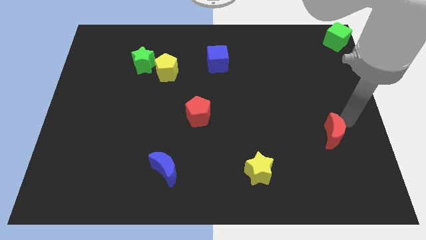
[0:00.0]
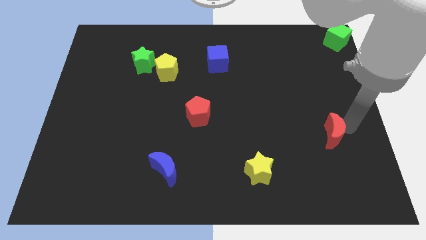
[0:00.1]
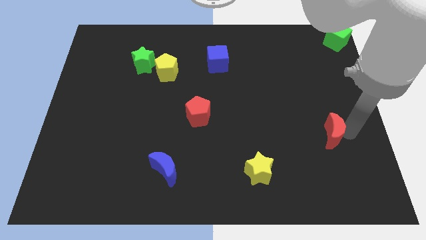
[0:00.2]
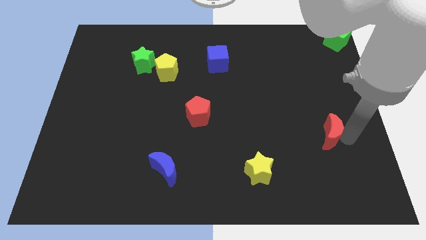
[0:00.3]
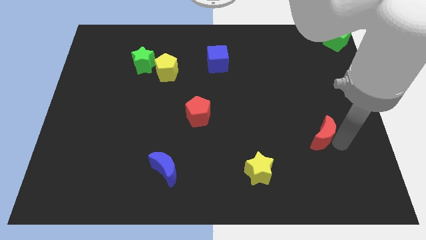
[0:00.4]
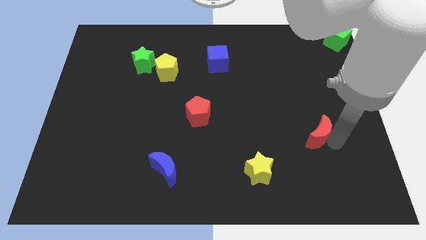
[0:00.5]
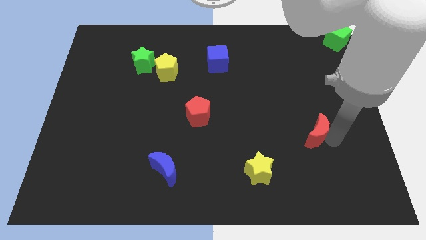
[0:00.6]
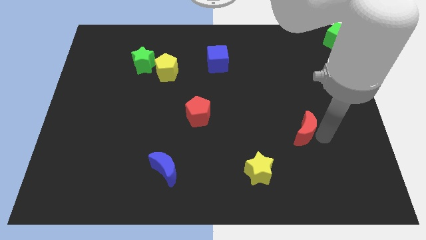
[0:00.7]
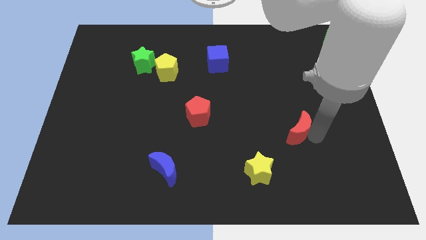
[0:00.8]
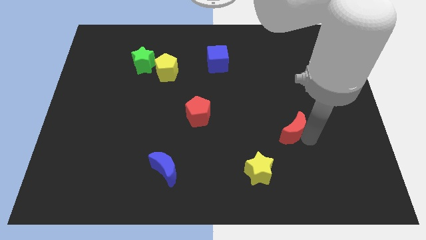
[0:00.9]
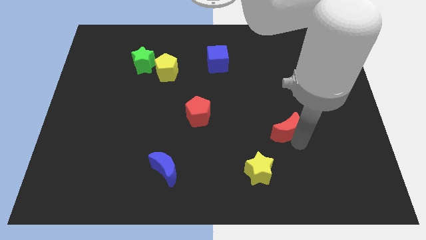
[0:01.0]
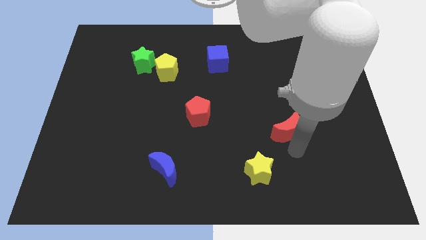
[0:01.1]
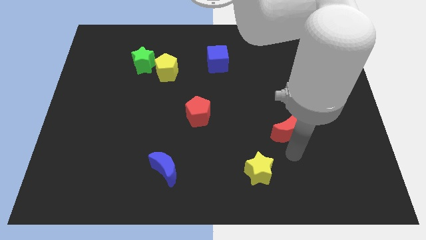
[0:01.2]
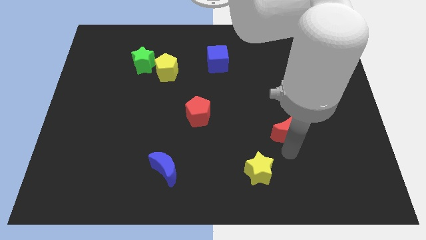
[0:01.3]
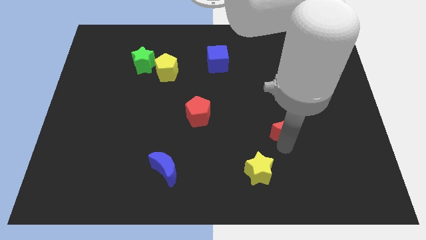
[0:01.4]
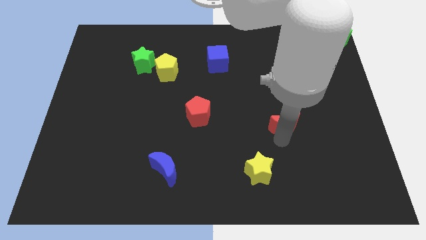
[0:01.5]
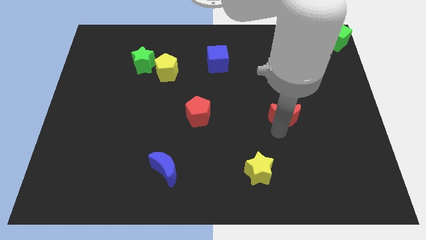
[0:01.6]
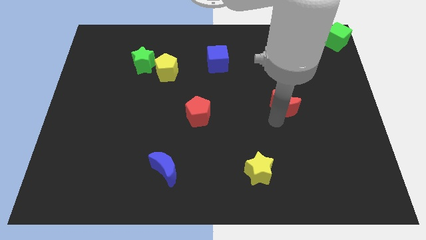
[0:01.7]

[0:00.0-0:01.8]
push the red crescent slightly upwards horizontal right to the red pentagon

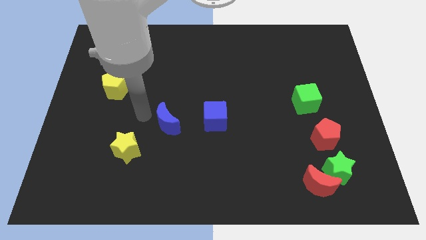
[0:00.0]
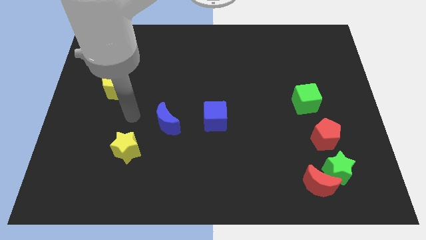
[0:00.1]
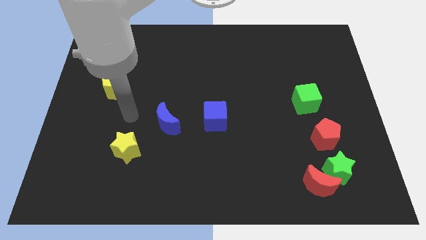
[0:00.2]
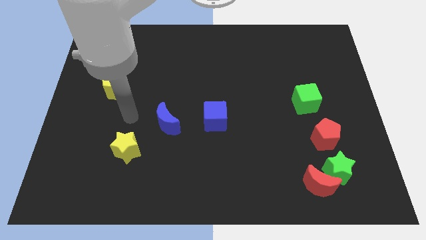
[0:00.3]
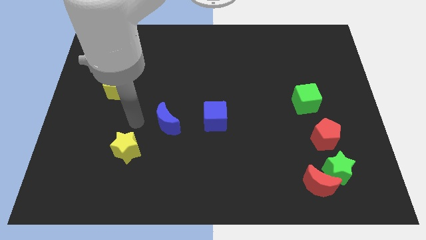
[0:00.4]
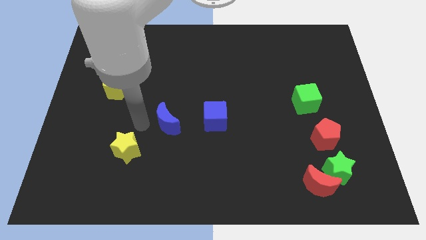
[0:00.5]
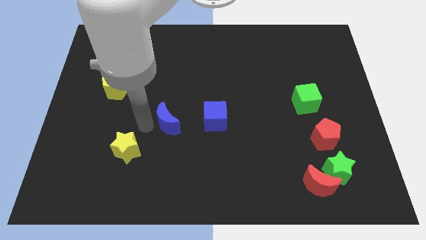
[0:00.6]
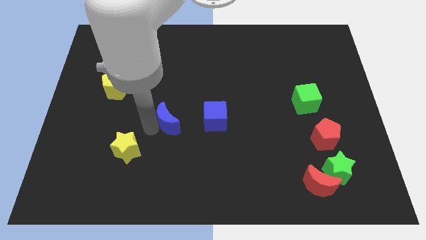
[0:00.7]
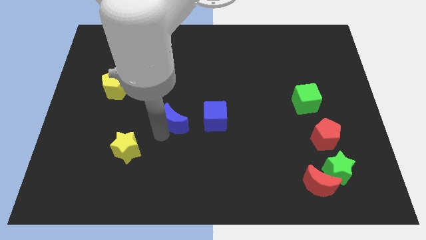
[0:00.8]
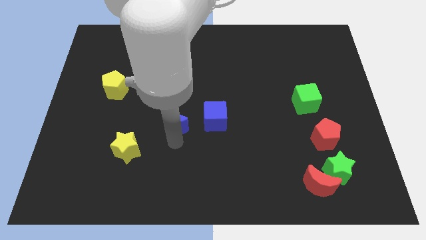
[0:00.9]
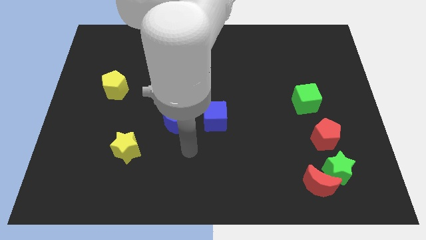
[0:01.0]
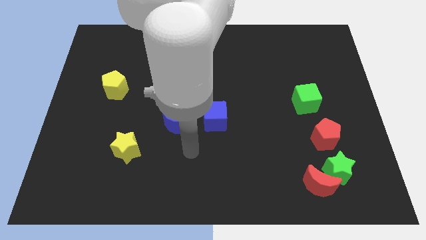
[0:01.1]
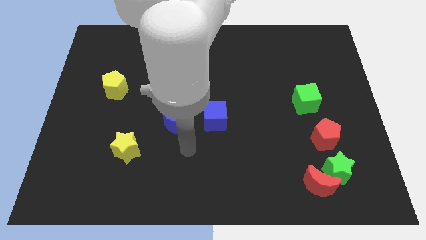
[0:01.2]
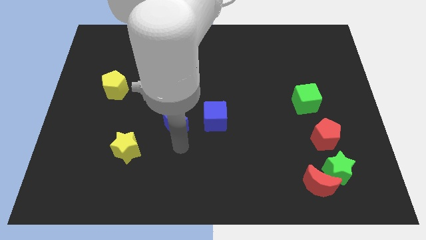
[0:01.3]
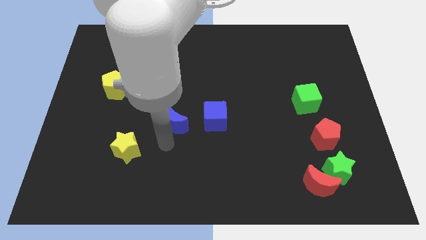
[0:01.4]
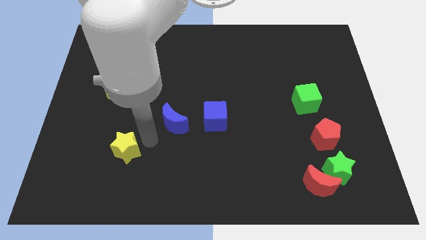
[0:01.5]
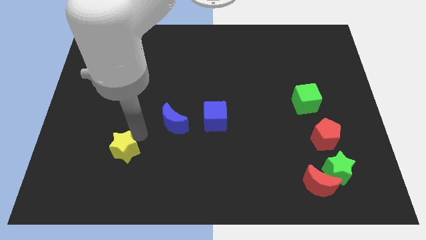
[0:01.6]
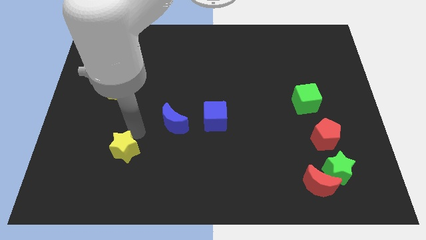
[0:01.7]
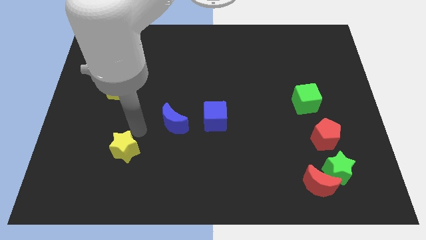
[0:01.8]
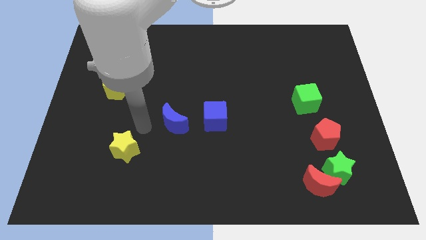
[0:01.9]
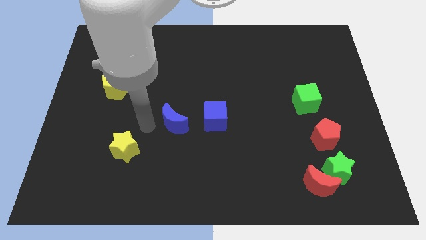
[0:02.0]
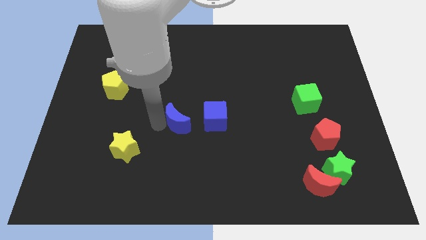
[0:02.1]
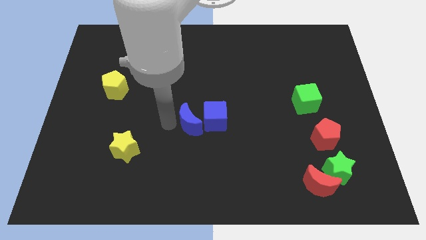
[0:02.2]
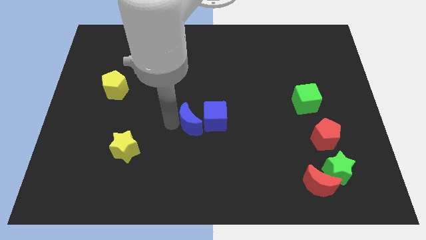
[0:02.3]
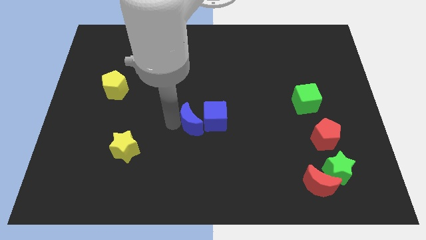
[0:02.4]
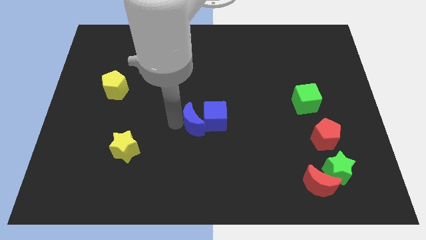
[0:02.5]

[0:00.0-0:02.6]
push blue moon in to blue cube

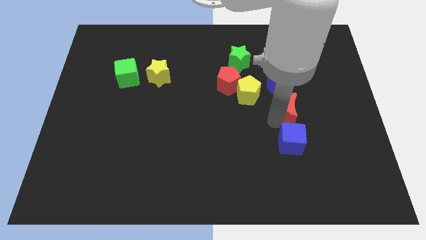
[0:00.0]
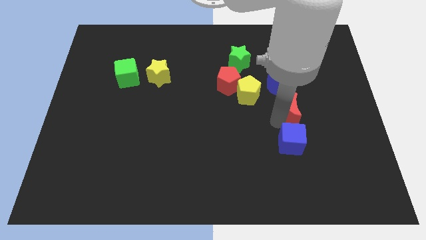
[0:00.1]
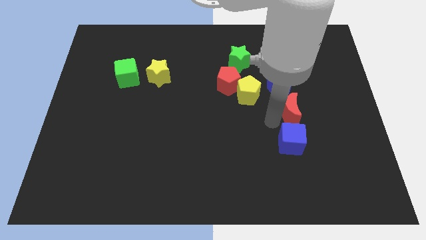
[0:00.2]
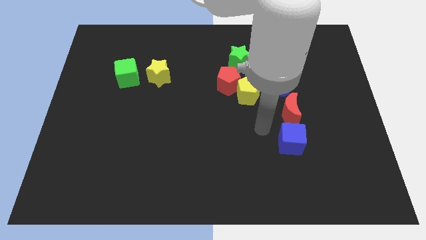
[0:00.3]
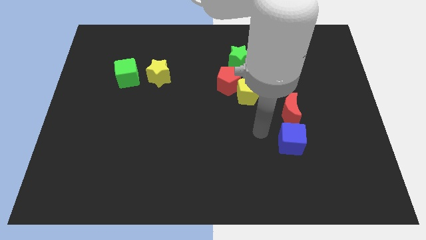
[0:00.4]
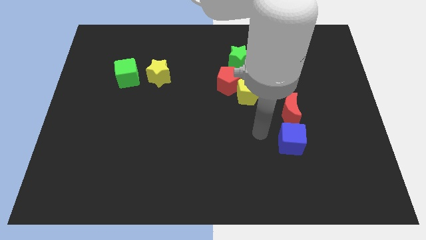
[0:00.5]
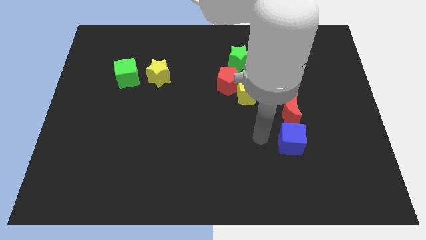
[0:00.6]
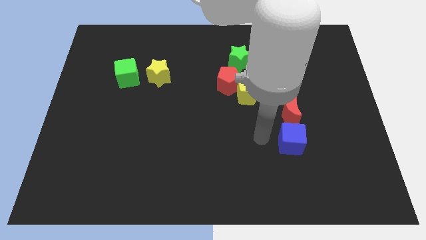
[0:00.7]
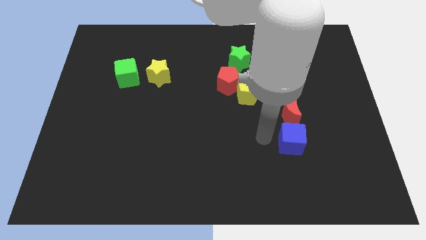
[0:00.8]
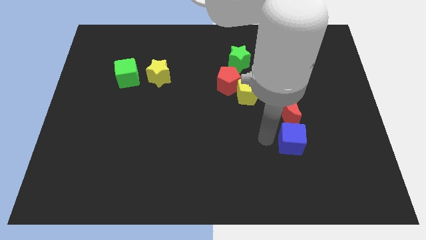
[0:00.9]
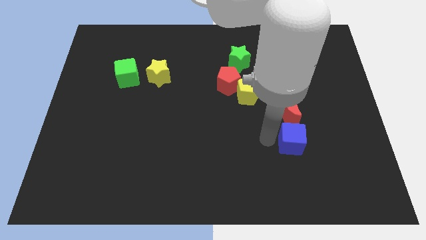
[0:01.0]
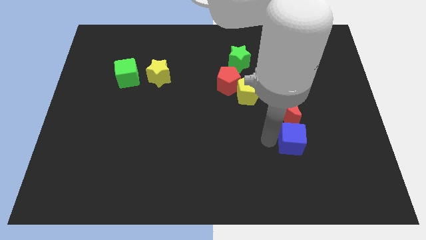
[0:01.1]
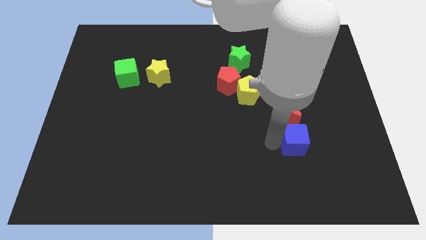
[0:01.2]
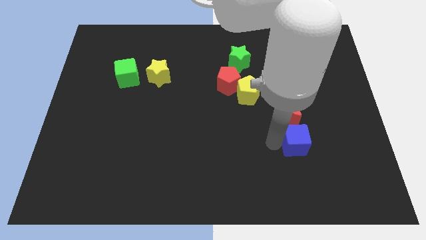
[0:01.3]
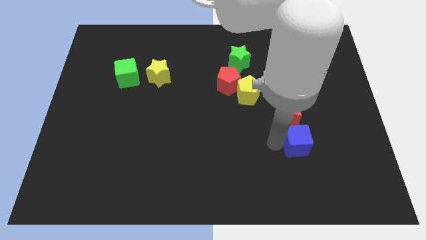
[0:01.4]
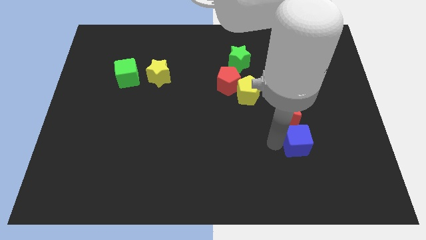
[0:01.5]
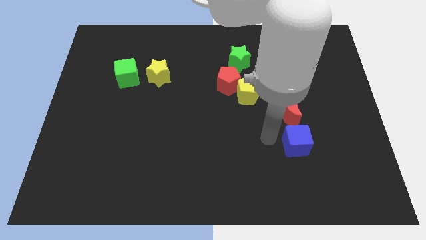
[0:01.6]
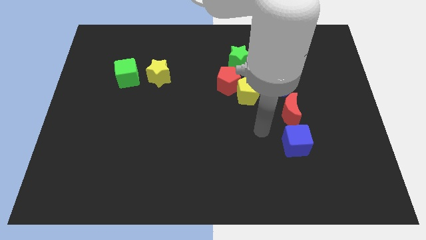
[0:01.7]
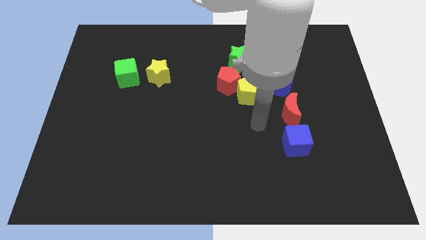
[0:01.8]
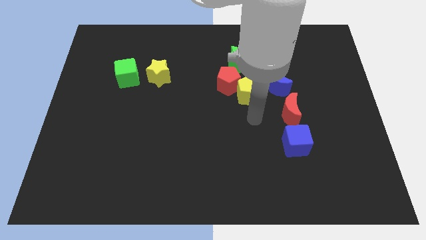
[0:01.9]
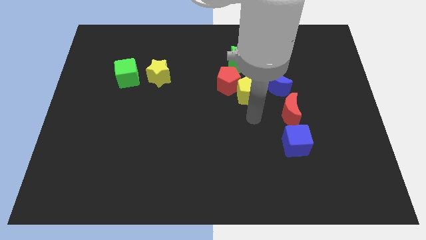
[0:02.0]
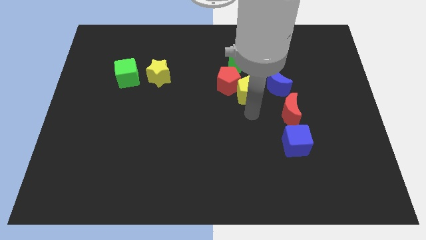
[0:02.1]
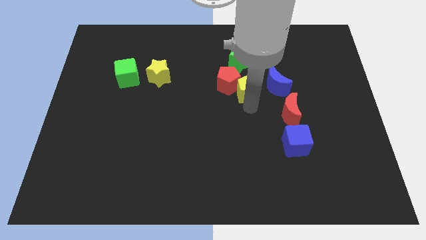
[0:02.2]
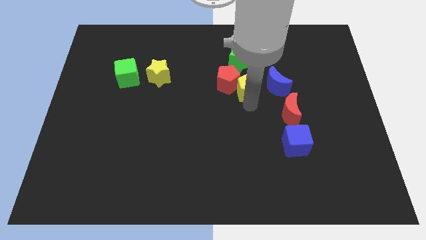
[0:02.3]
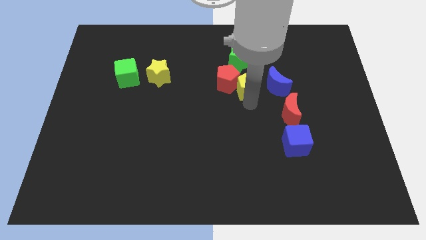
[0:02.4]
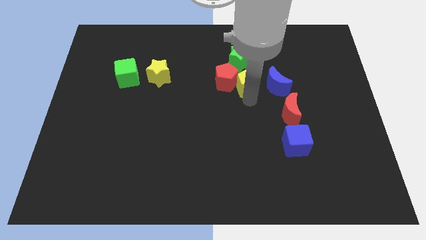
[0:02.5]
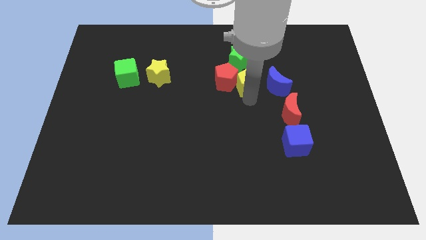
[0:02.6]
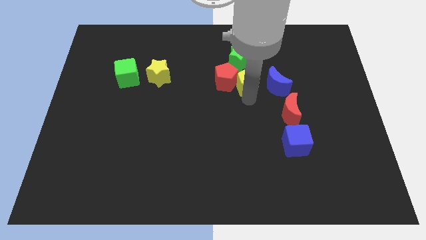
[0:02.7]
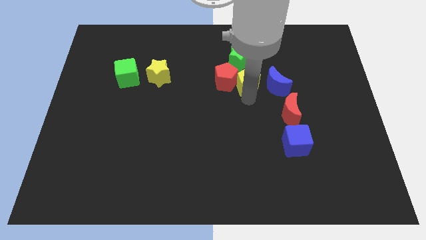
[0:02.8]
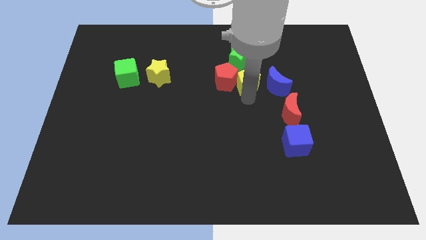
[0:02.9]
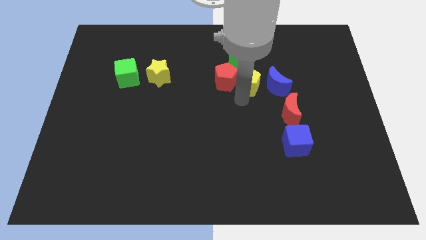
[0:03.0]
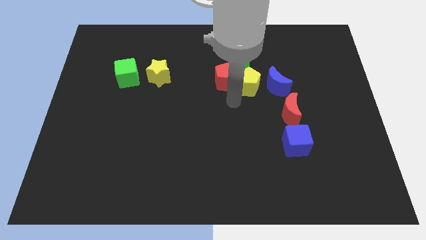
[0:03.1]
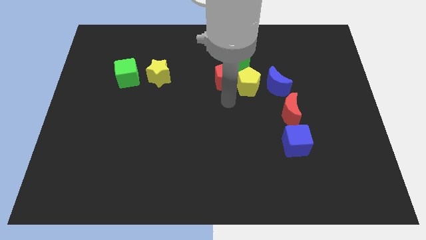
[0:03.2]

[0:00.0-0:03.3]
touch your arm to the yellow pentagon

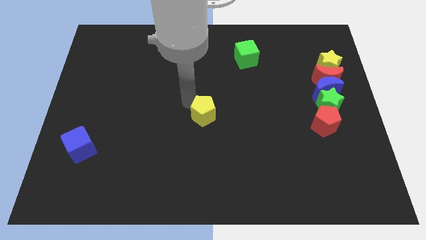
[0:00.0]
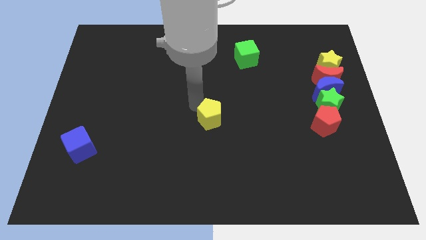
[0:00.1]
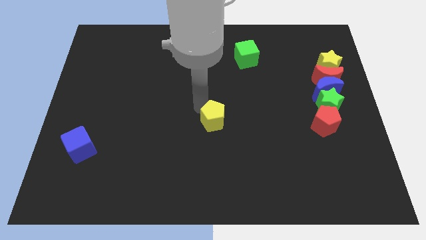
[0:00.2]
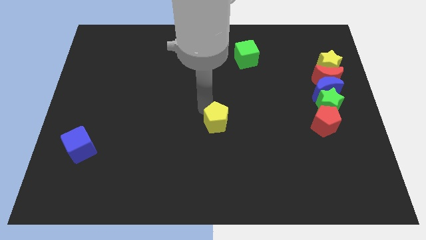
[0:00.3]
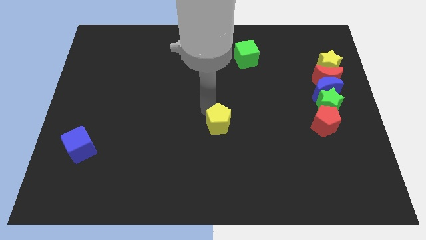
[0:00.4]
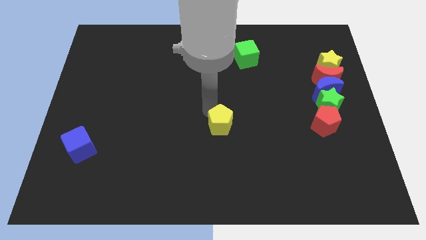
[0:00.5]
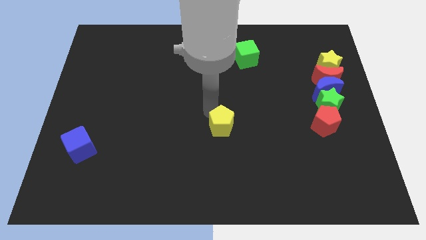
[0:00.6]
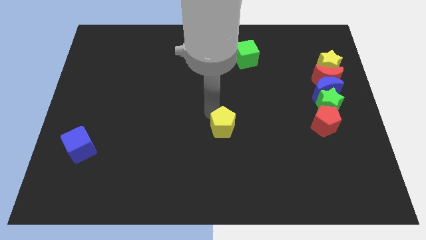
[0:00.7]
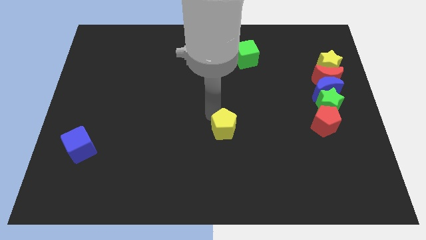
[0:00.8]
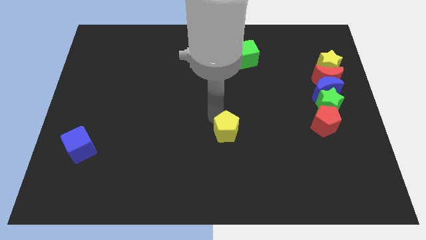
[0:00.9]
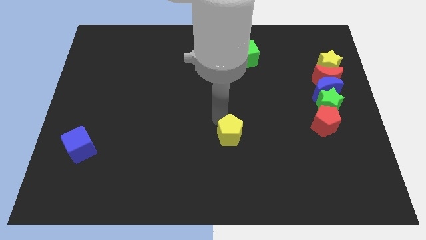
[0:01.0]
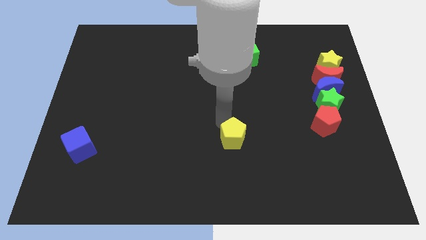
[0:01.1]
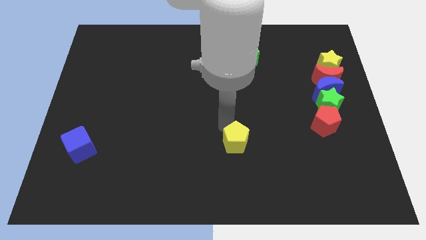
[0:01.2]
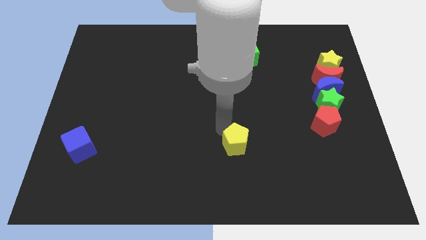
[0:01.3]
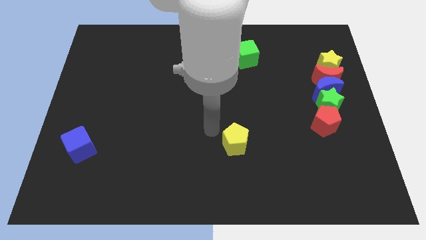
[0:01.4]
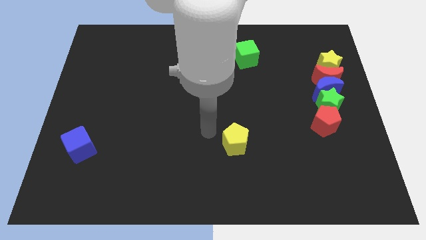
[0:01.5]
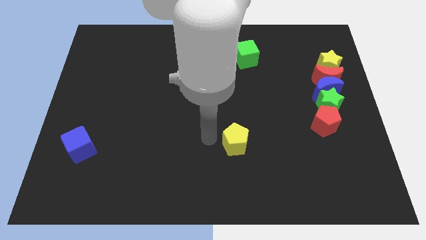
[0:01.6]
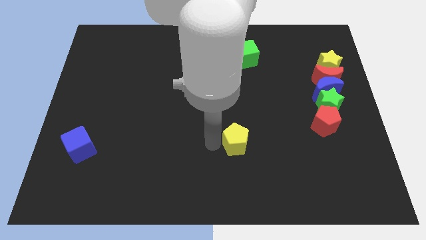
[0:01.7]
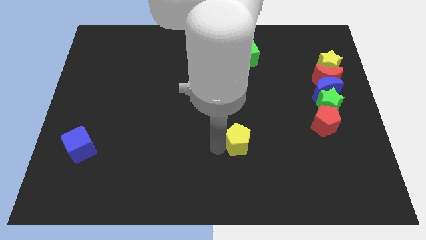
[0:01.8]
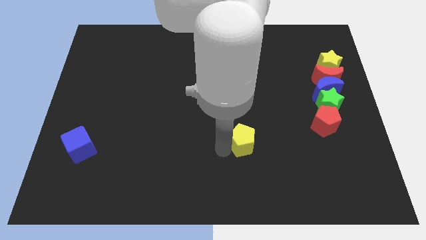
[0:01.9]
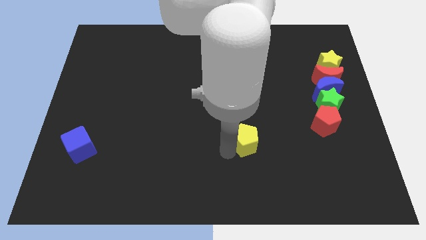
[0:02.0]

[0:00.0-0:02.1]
push the yellow pentagon diagonally towards the bottom left side of the red pentagon
